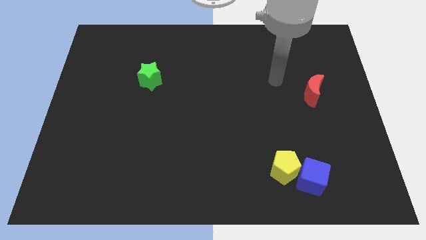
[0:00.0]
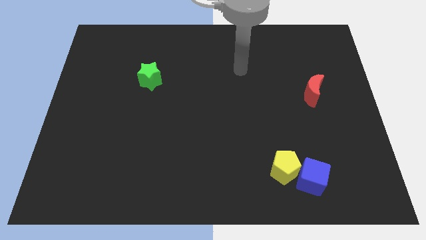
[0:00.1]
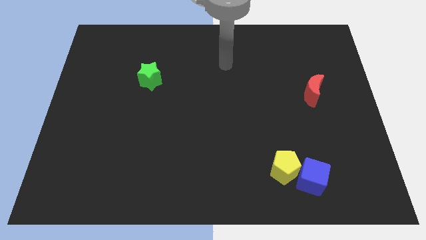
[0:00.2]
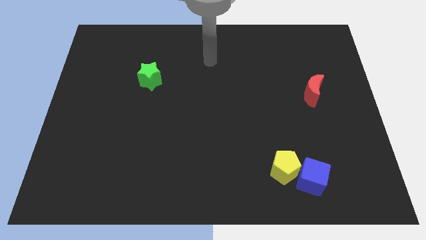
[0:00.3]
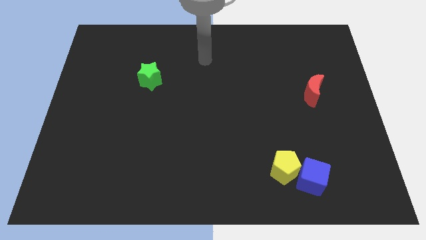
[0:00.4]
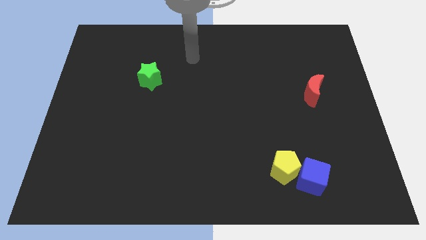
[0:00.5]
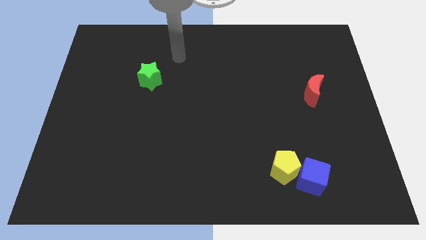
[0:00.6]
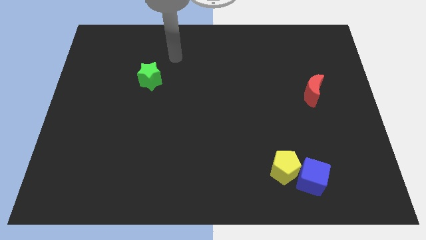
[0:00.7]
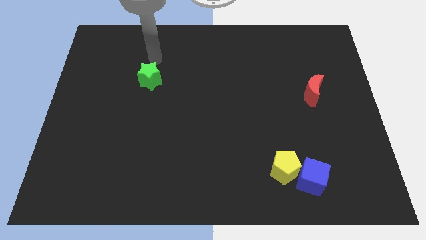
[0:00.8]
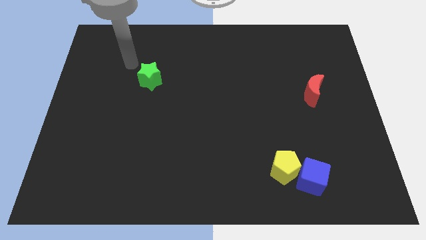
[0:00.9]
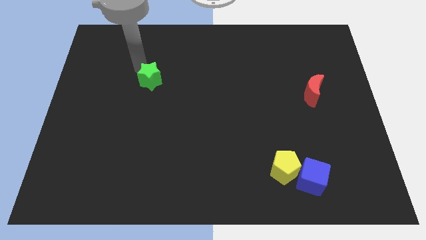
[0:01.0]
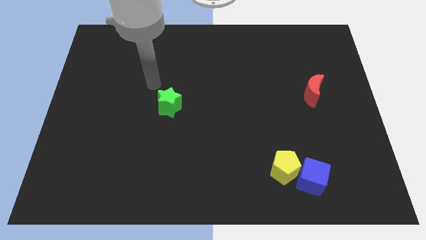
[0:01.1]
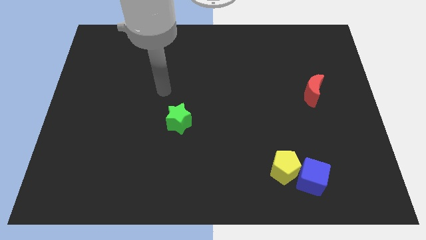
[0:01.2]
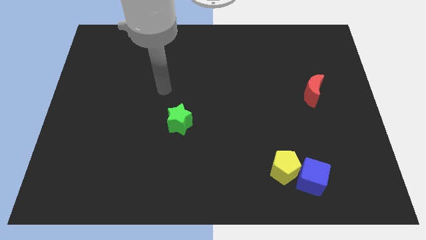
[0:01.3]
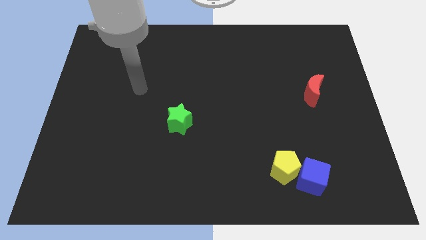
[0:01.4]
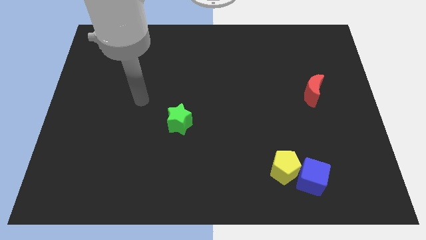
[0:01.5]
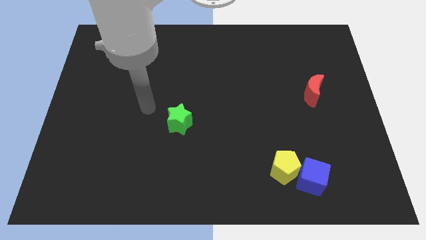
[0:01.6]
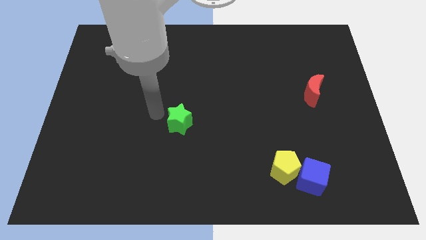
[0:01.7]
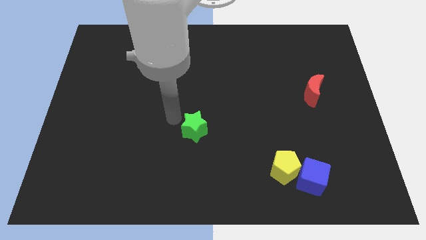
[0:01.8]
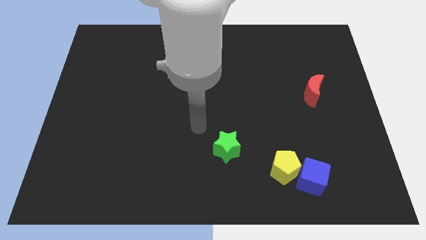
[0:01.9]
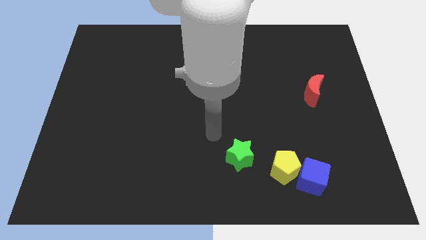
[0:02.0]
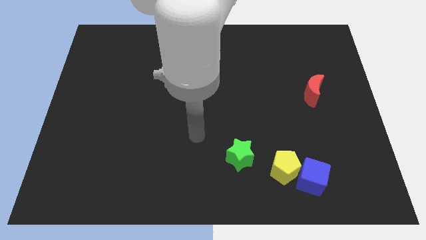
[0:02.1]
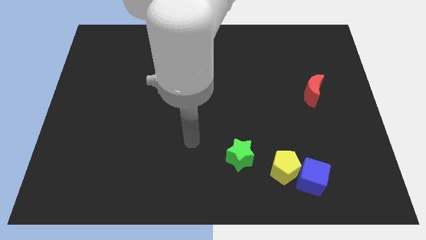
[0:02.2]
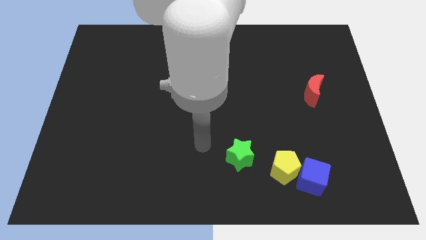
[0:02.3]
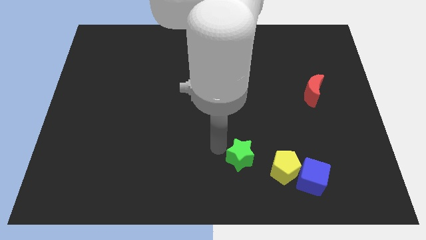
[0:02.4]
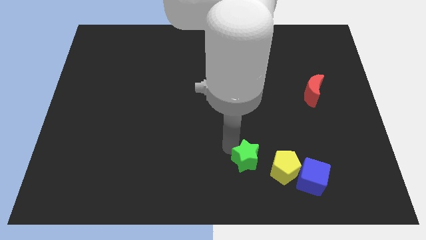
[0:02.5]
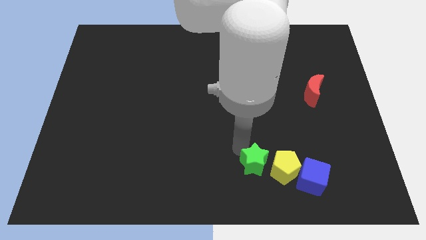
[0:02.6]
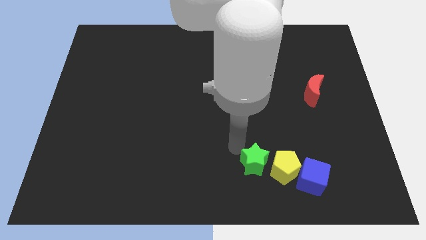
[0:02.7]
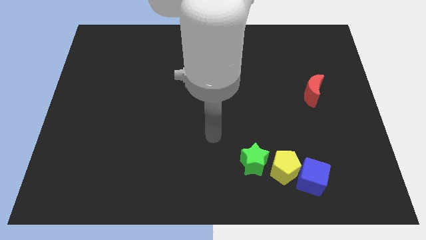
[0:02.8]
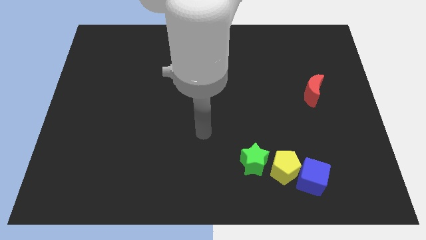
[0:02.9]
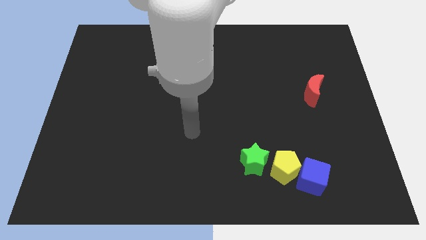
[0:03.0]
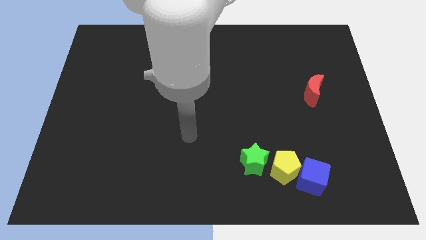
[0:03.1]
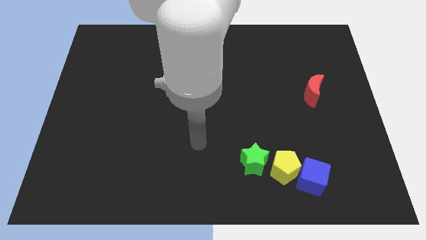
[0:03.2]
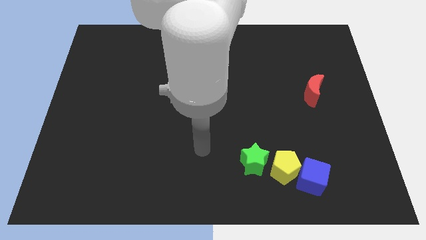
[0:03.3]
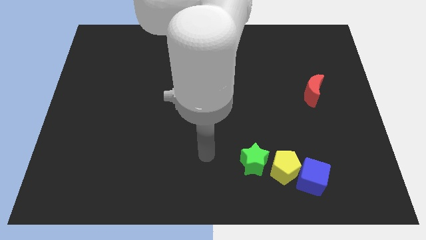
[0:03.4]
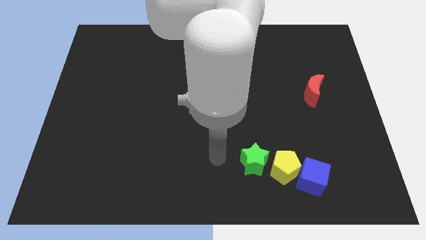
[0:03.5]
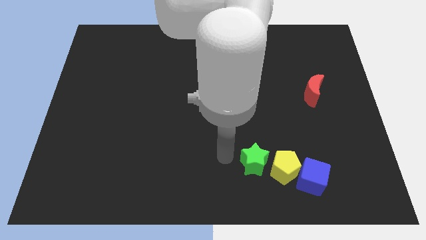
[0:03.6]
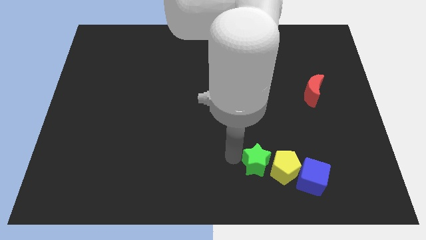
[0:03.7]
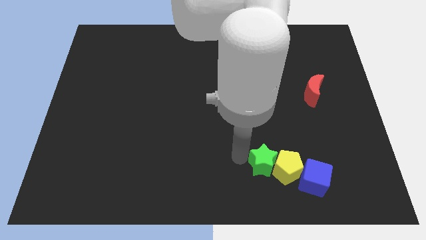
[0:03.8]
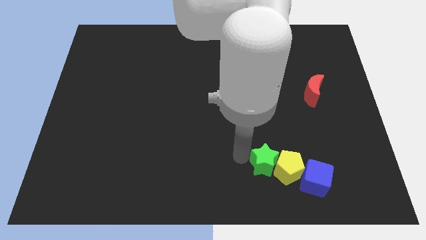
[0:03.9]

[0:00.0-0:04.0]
move the star to the yellow pentagon

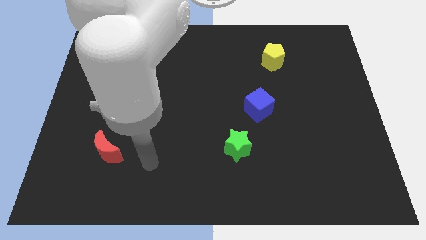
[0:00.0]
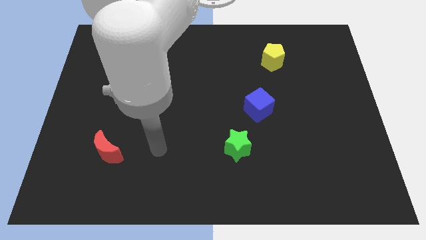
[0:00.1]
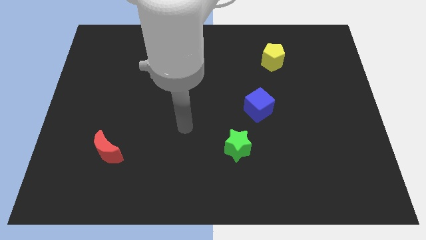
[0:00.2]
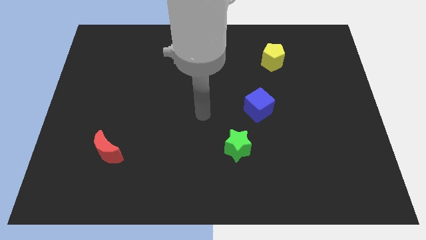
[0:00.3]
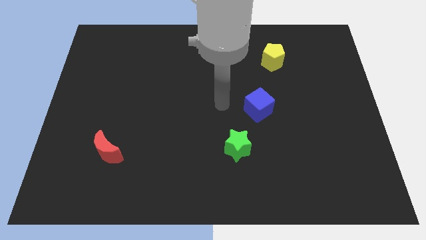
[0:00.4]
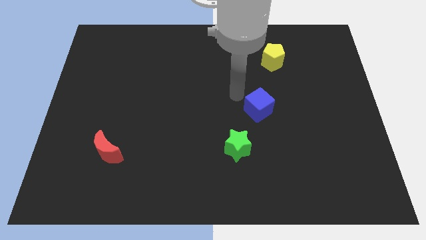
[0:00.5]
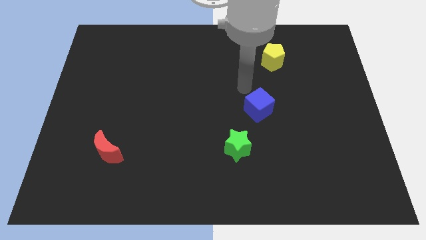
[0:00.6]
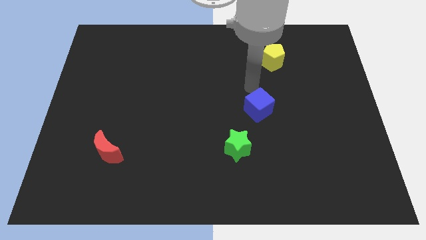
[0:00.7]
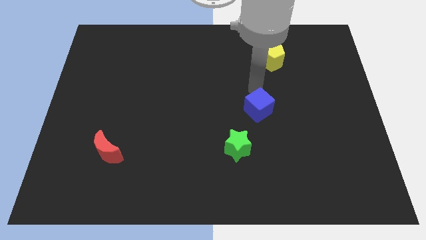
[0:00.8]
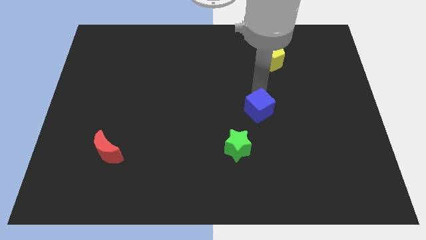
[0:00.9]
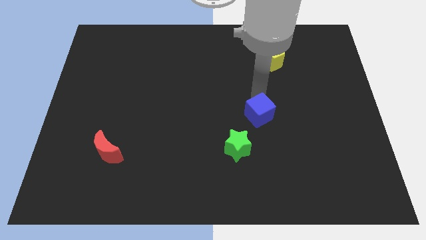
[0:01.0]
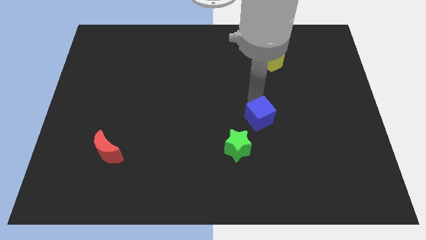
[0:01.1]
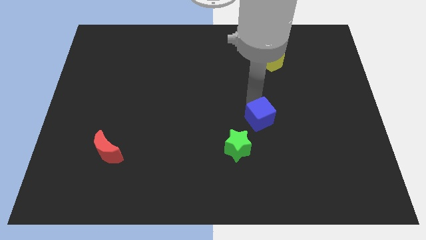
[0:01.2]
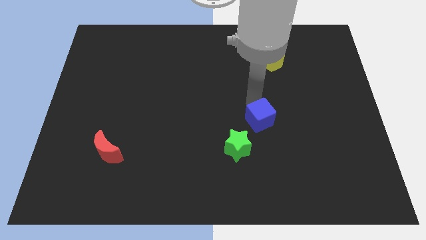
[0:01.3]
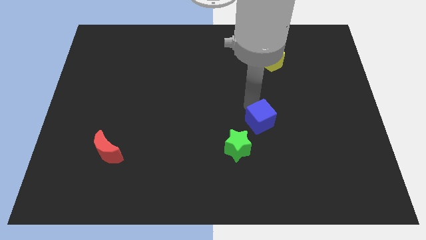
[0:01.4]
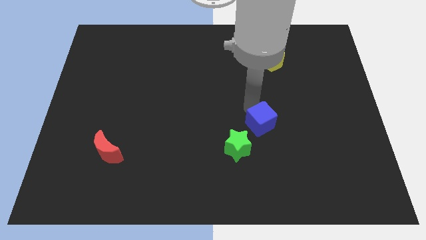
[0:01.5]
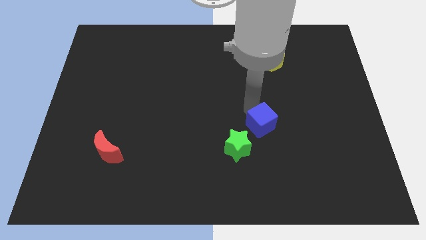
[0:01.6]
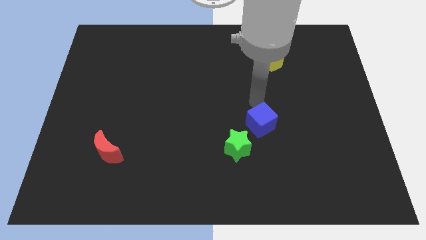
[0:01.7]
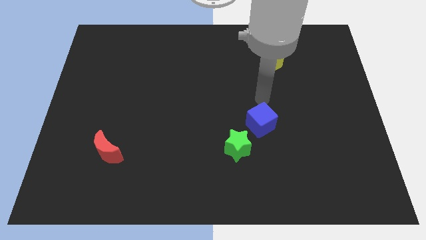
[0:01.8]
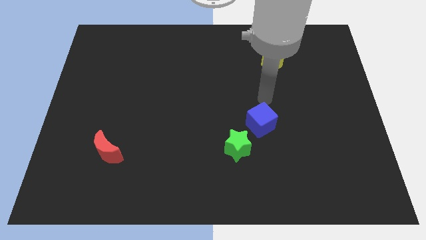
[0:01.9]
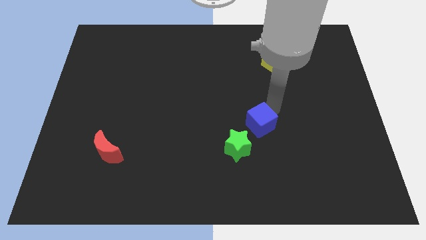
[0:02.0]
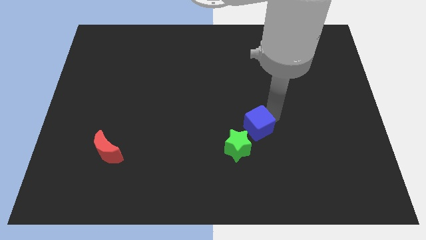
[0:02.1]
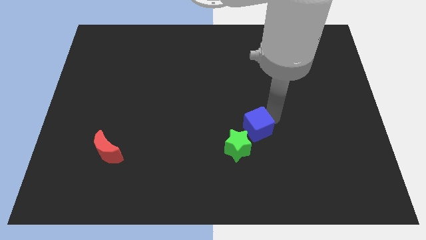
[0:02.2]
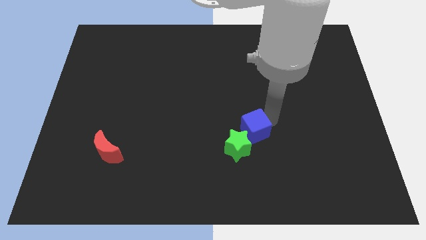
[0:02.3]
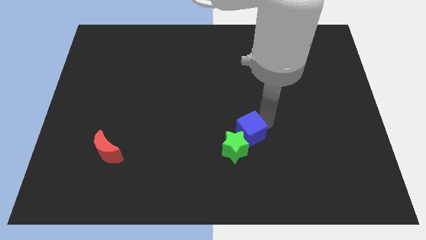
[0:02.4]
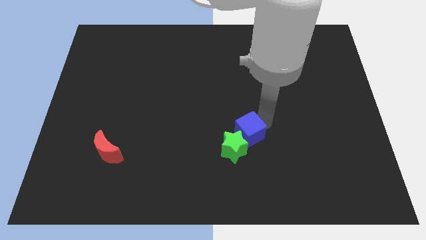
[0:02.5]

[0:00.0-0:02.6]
move the blue cube to the green star

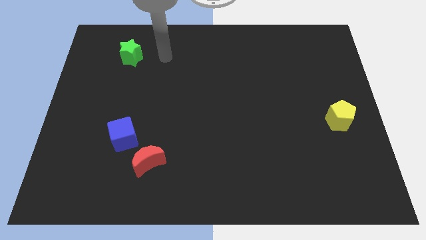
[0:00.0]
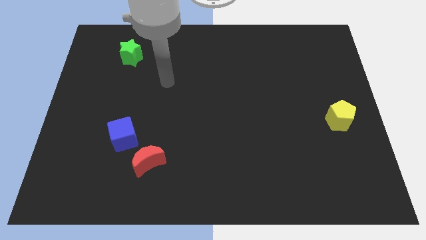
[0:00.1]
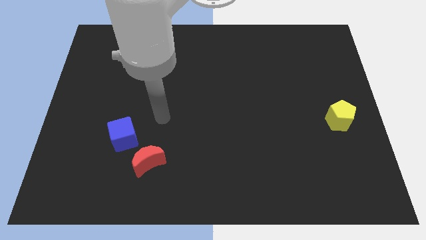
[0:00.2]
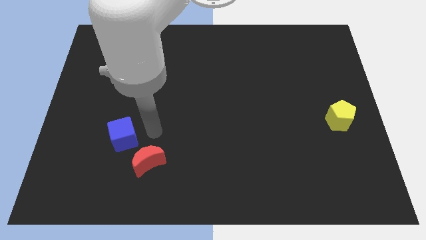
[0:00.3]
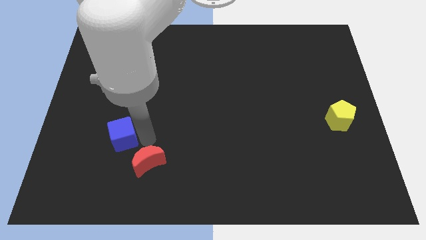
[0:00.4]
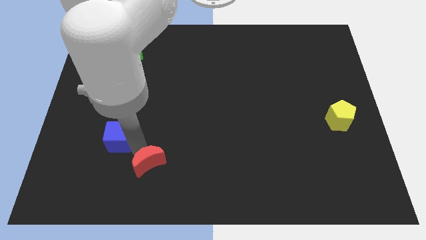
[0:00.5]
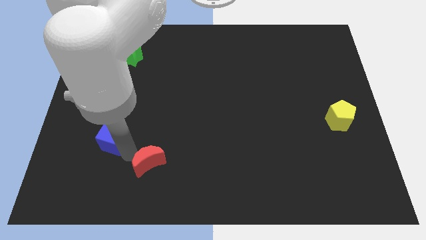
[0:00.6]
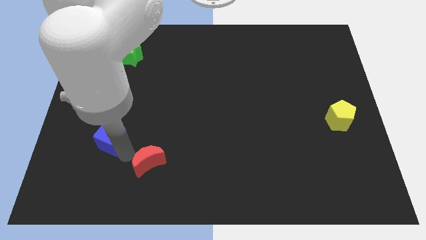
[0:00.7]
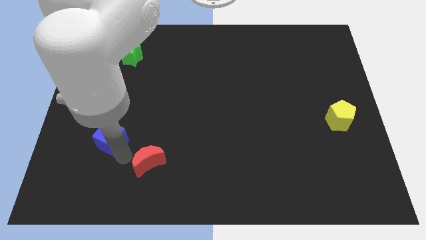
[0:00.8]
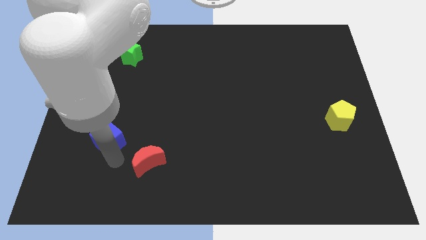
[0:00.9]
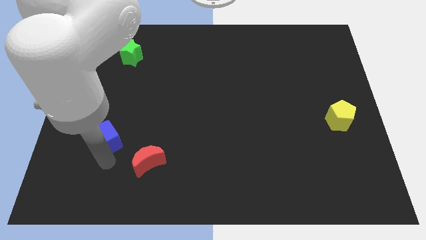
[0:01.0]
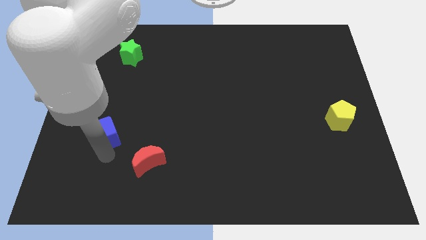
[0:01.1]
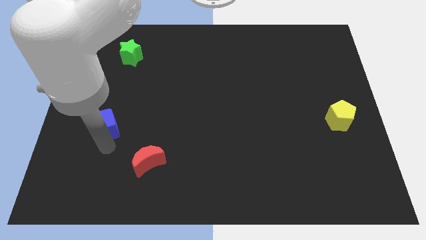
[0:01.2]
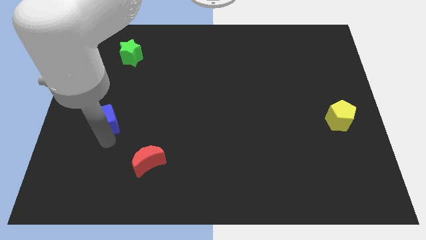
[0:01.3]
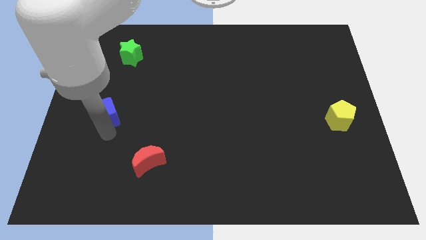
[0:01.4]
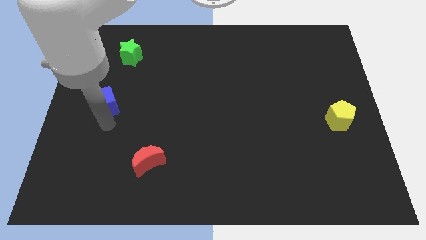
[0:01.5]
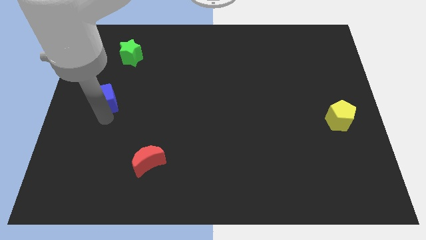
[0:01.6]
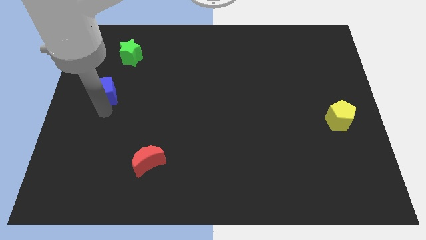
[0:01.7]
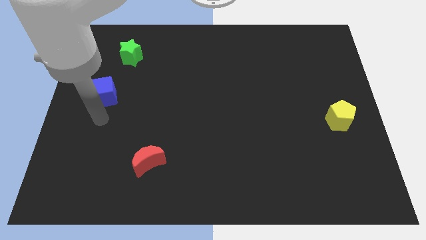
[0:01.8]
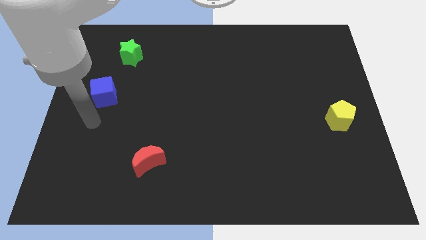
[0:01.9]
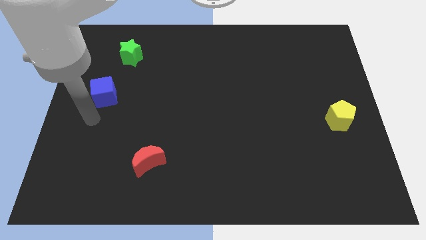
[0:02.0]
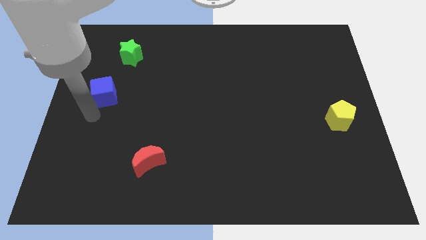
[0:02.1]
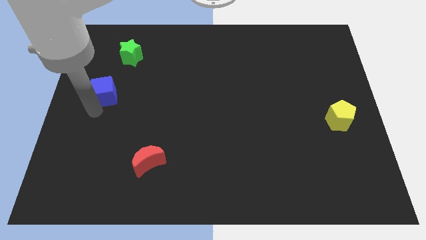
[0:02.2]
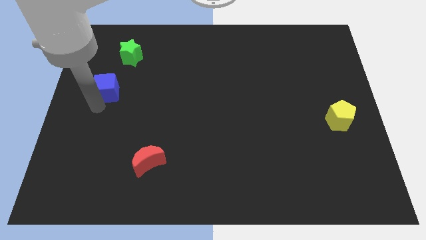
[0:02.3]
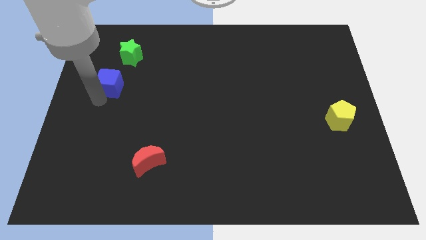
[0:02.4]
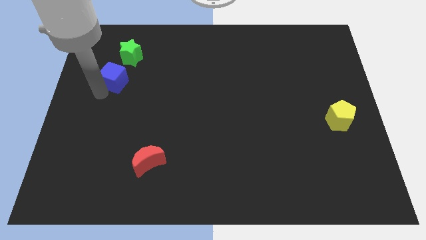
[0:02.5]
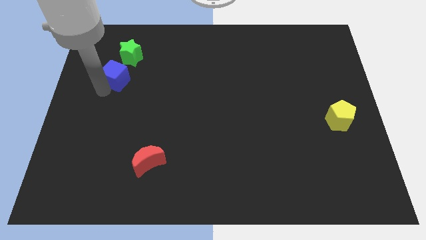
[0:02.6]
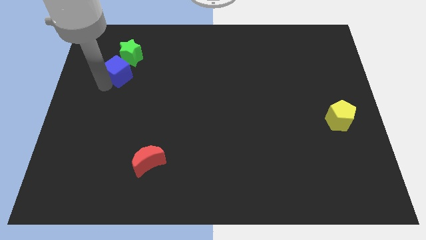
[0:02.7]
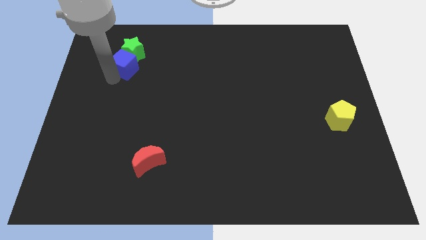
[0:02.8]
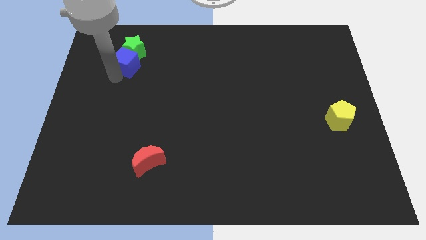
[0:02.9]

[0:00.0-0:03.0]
push the cube to the green block
